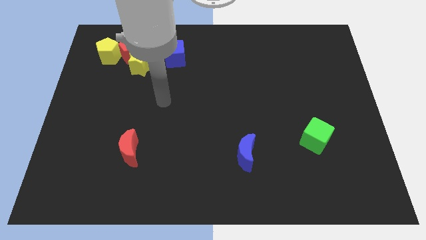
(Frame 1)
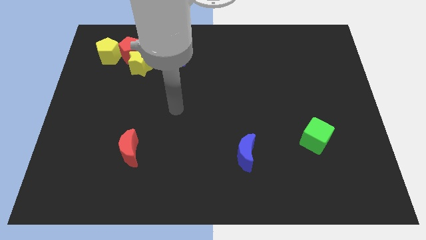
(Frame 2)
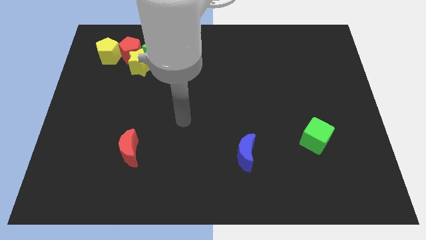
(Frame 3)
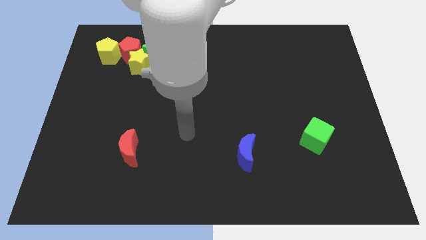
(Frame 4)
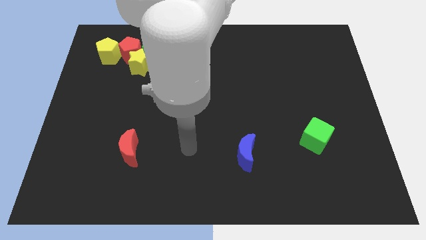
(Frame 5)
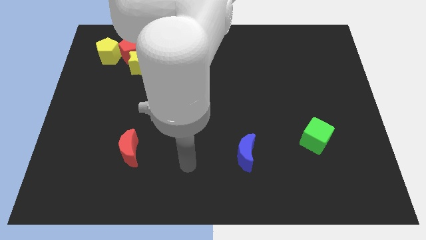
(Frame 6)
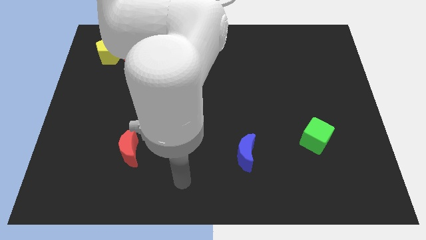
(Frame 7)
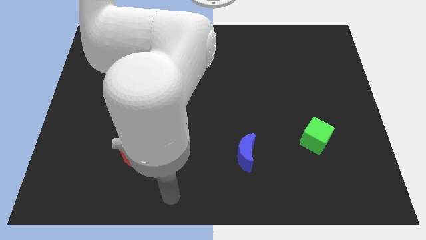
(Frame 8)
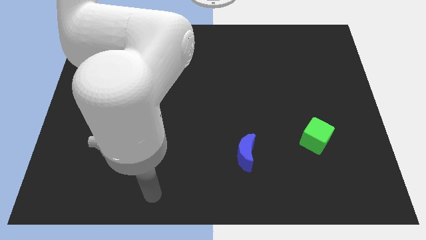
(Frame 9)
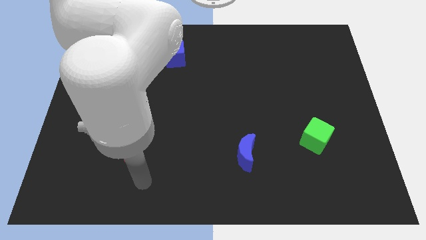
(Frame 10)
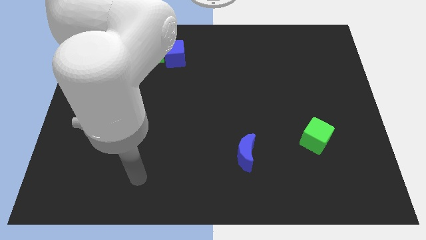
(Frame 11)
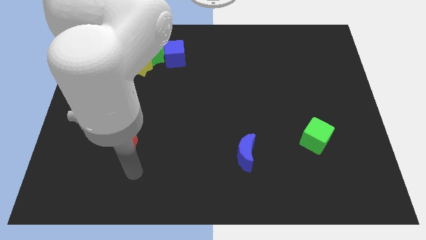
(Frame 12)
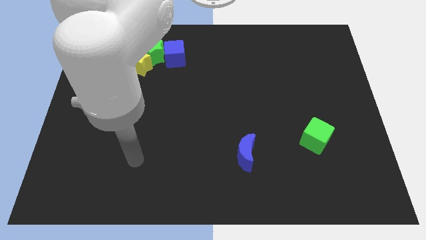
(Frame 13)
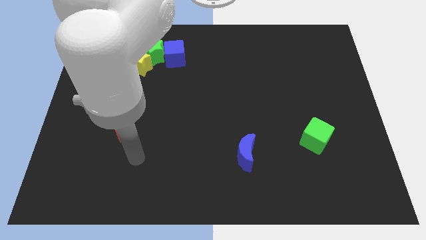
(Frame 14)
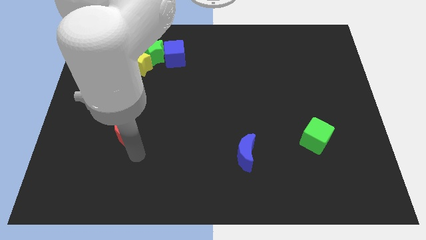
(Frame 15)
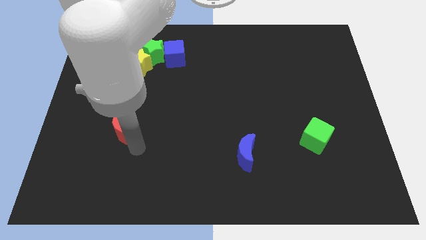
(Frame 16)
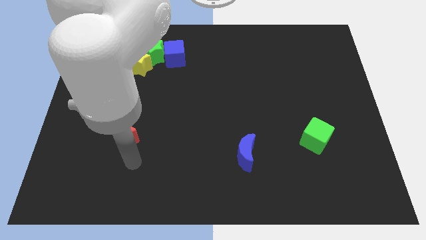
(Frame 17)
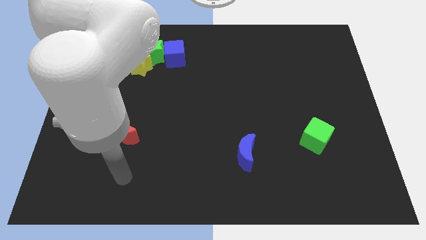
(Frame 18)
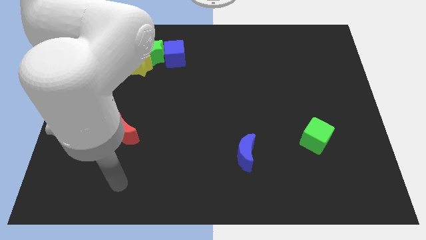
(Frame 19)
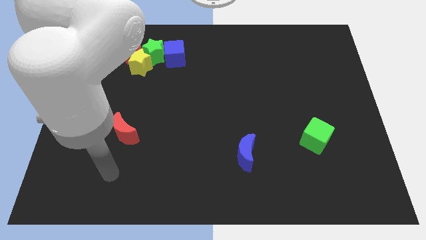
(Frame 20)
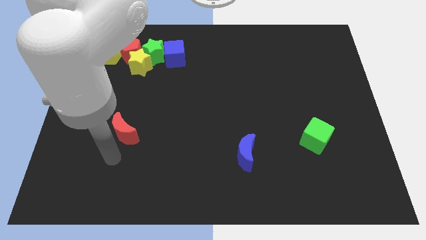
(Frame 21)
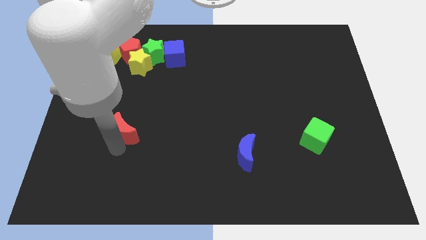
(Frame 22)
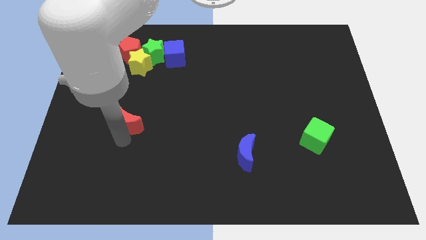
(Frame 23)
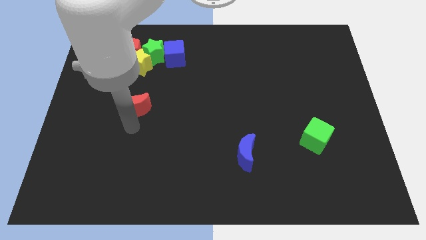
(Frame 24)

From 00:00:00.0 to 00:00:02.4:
place the red moon below the yellow star

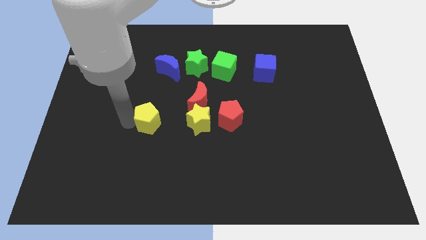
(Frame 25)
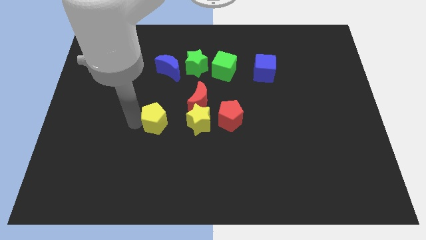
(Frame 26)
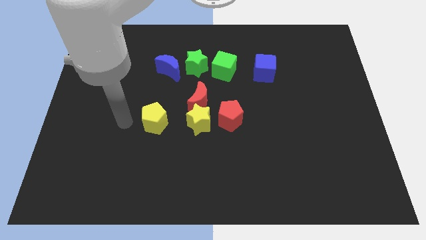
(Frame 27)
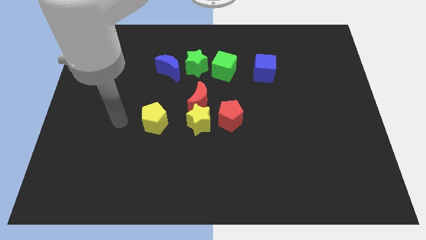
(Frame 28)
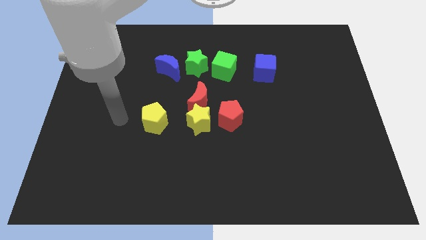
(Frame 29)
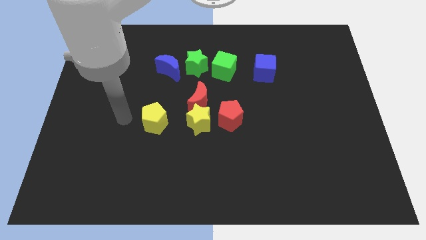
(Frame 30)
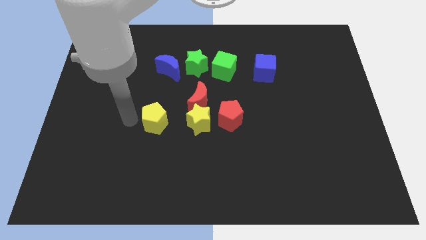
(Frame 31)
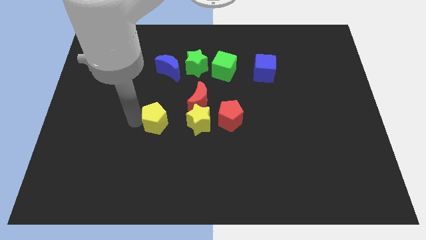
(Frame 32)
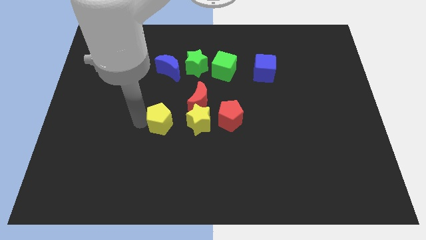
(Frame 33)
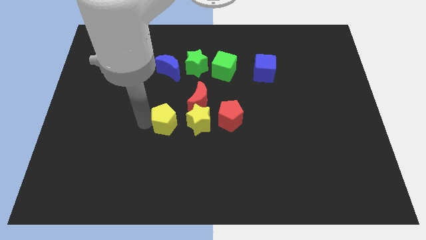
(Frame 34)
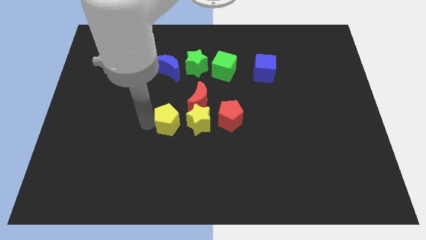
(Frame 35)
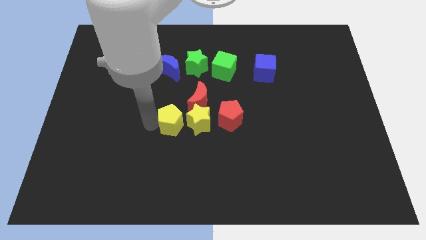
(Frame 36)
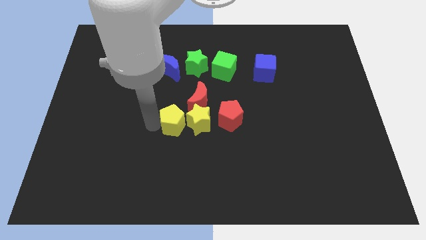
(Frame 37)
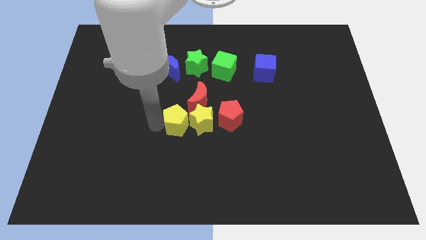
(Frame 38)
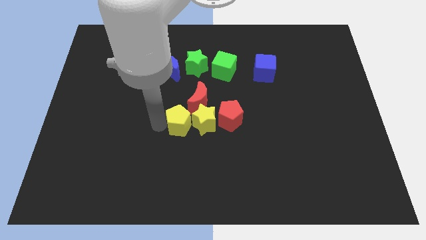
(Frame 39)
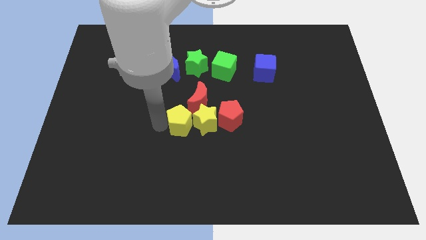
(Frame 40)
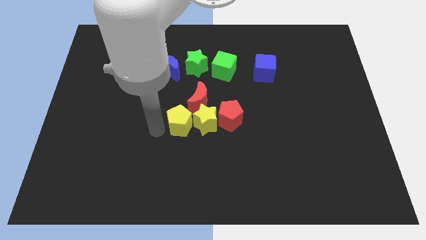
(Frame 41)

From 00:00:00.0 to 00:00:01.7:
slightly push the yellow pentagon into the group of object

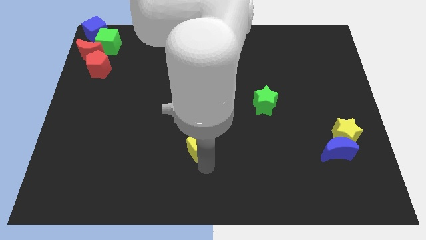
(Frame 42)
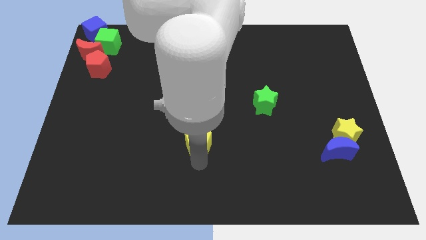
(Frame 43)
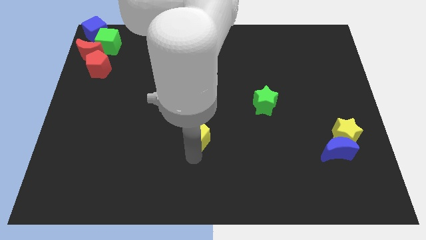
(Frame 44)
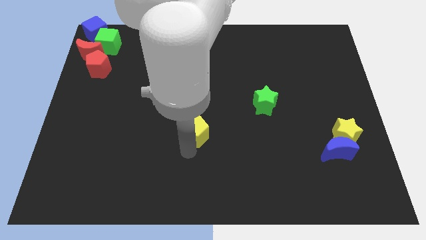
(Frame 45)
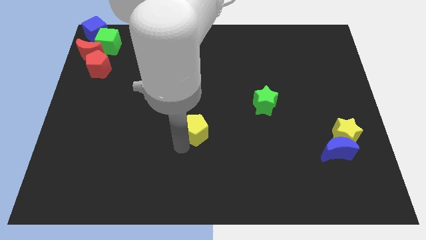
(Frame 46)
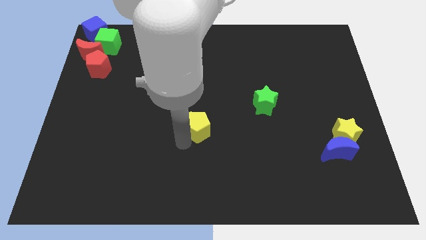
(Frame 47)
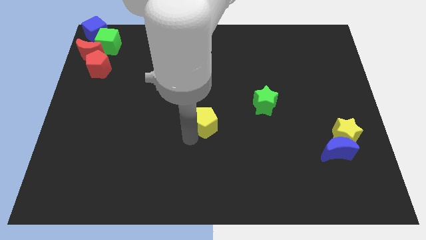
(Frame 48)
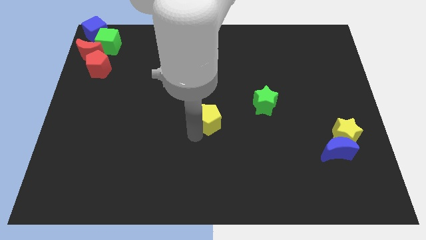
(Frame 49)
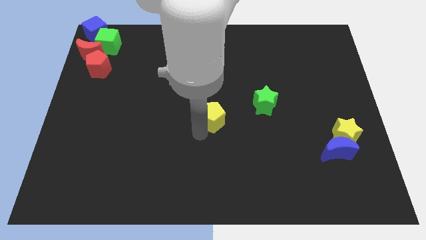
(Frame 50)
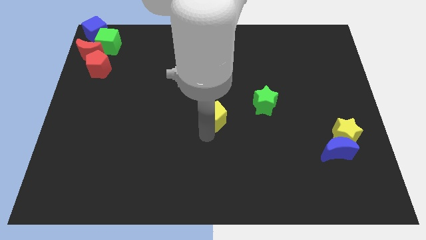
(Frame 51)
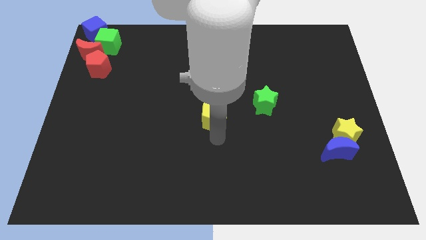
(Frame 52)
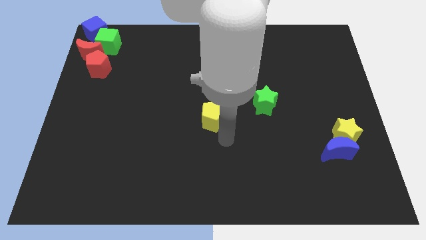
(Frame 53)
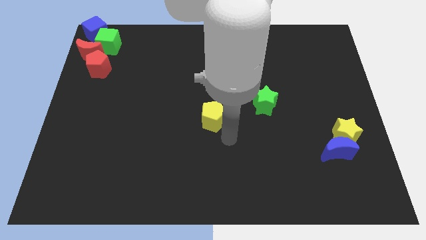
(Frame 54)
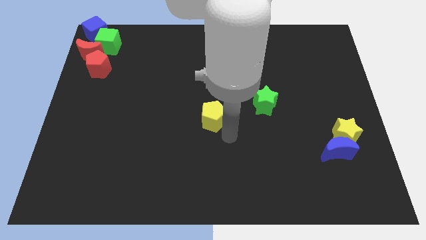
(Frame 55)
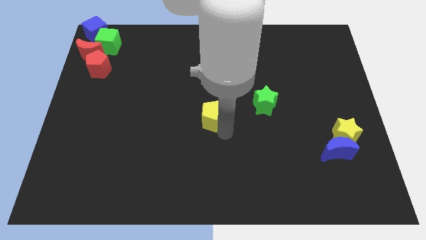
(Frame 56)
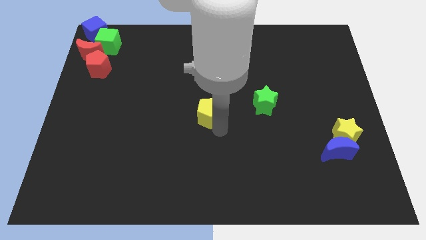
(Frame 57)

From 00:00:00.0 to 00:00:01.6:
move yellow pentagon towards the centre of the board

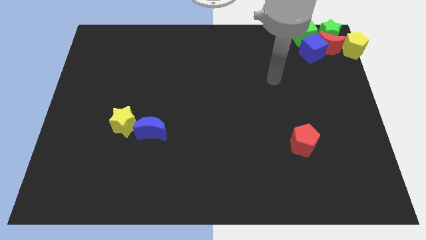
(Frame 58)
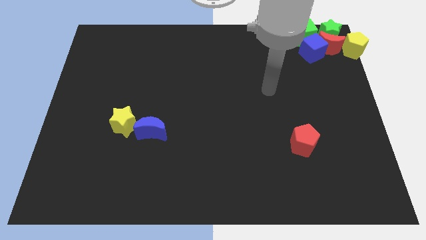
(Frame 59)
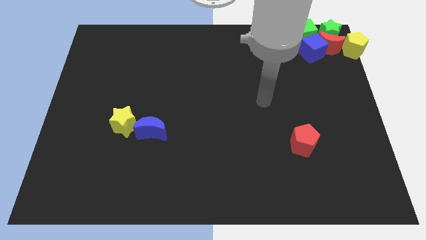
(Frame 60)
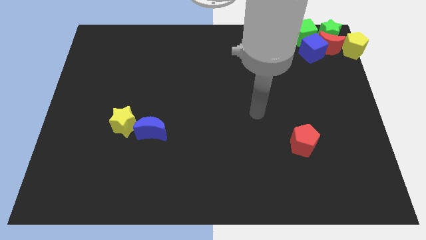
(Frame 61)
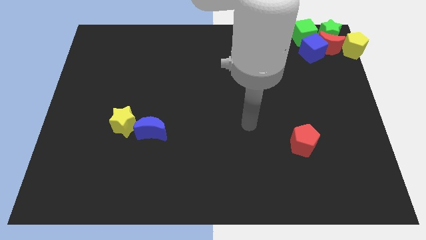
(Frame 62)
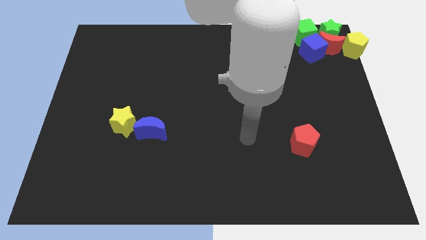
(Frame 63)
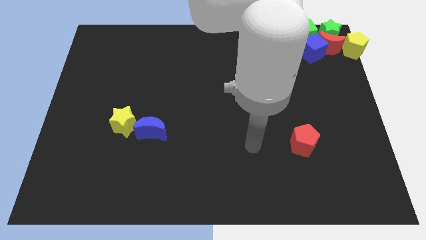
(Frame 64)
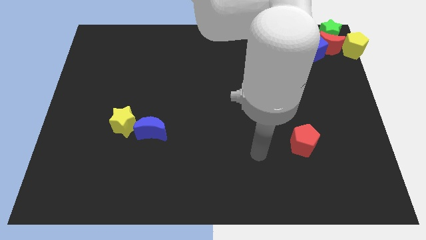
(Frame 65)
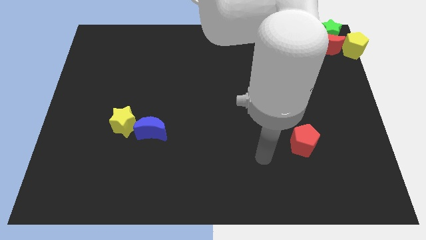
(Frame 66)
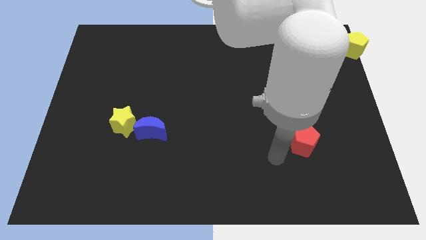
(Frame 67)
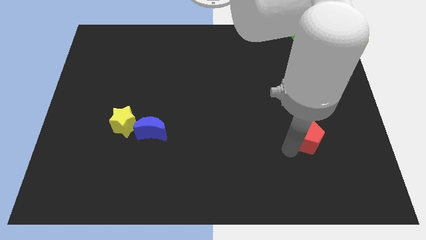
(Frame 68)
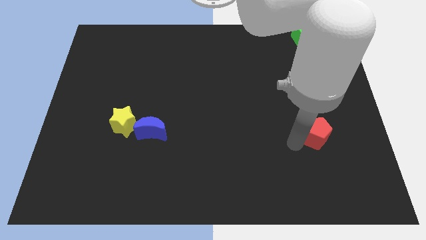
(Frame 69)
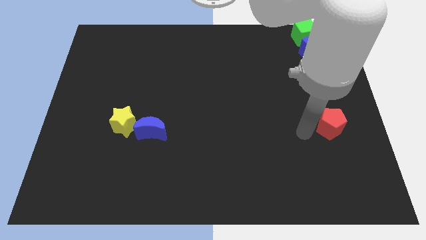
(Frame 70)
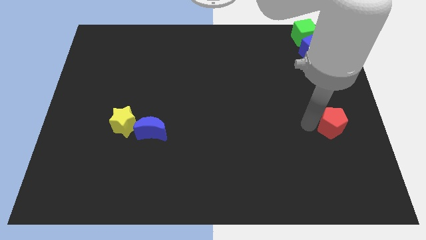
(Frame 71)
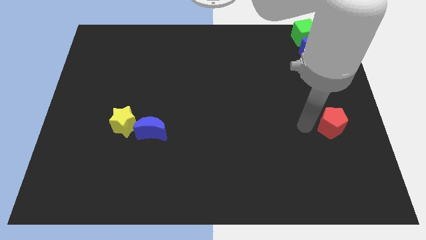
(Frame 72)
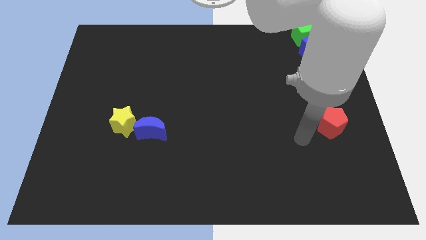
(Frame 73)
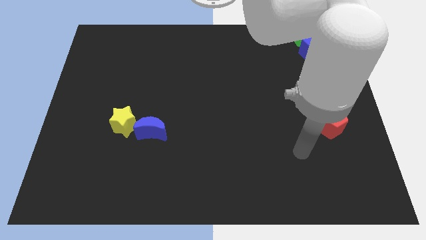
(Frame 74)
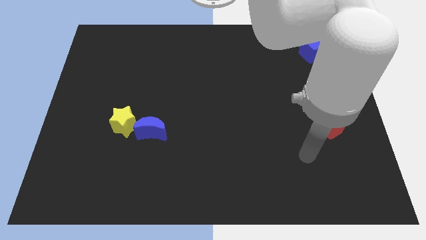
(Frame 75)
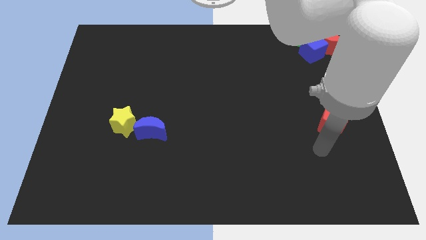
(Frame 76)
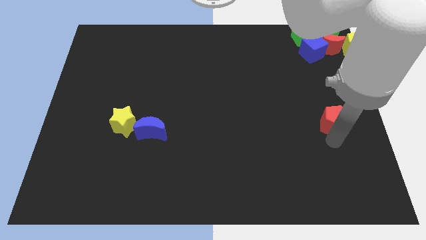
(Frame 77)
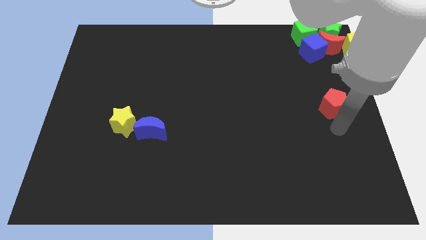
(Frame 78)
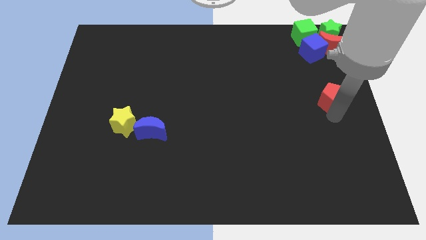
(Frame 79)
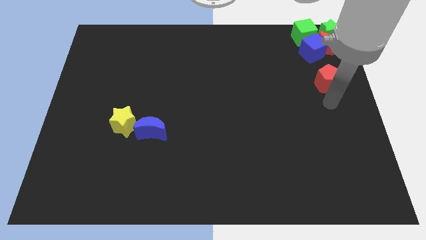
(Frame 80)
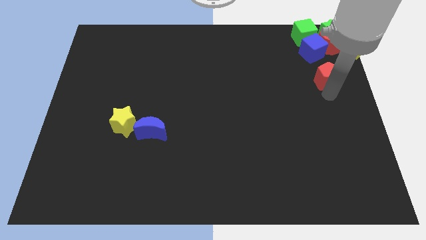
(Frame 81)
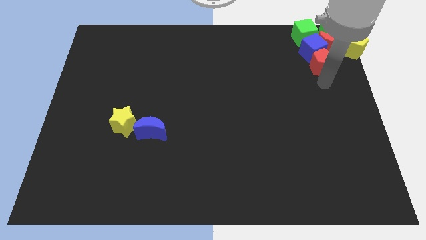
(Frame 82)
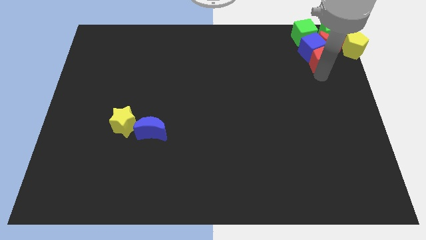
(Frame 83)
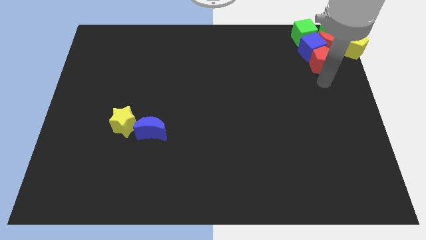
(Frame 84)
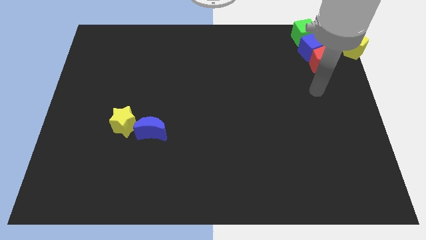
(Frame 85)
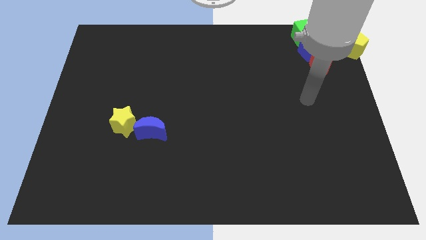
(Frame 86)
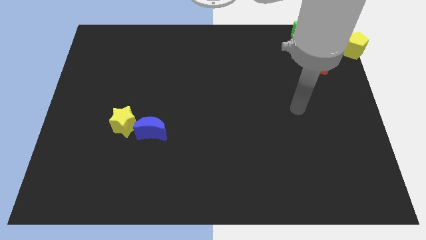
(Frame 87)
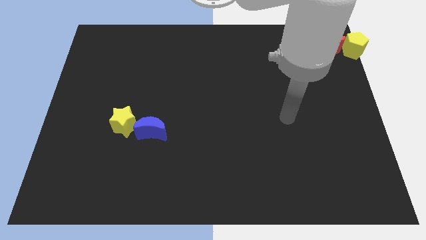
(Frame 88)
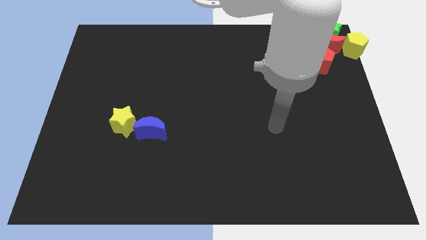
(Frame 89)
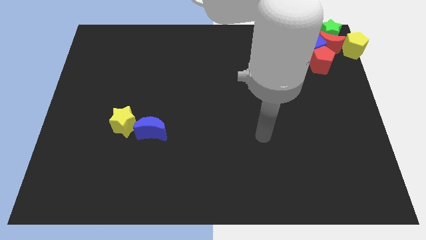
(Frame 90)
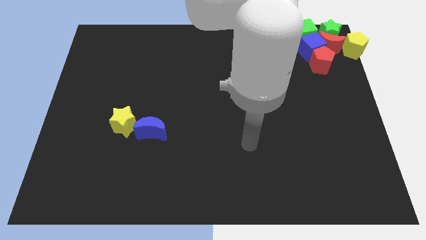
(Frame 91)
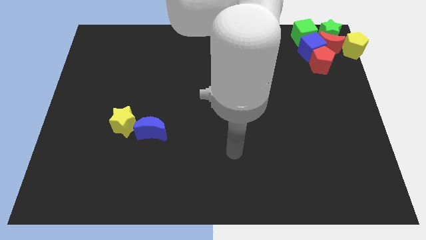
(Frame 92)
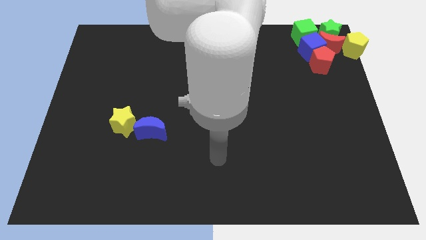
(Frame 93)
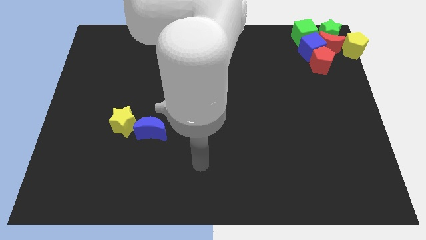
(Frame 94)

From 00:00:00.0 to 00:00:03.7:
place the red pentagon to the bottom of the blue cube
